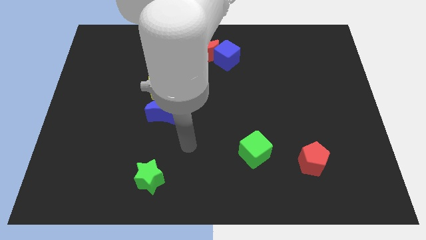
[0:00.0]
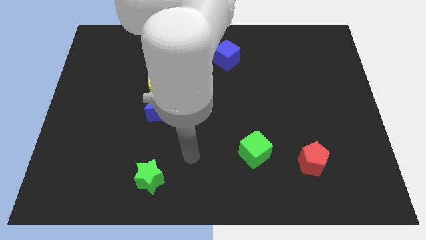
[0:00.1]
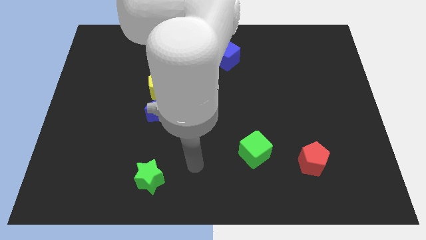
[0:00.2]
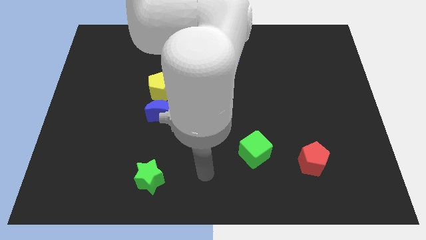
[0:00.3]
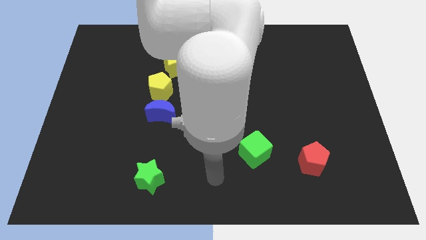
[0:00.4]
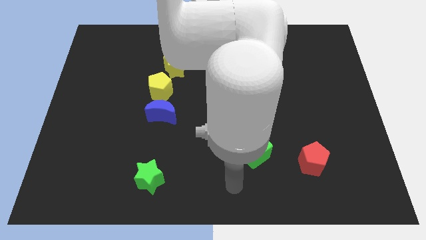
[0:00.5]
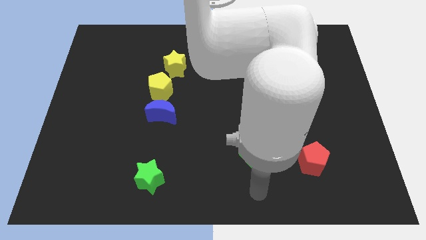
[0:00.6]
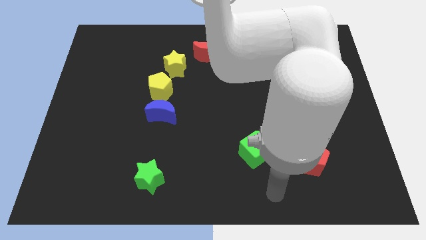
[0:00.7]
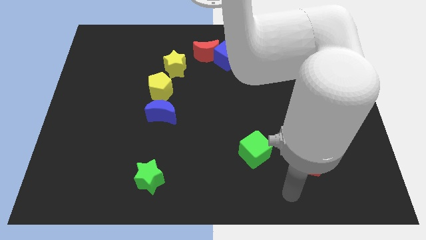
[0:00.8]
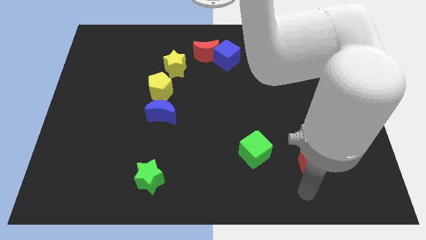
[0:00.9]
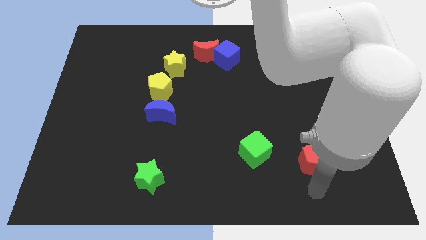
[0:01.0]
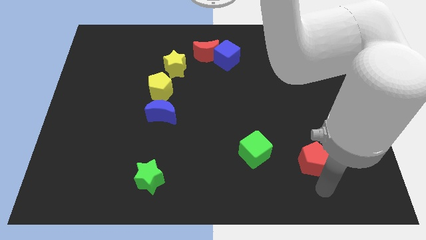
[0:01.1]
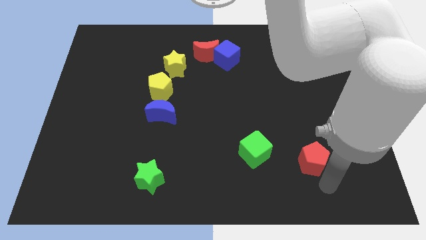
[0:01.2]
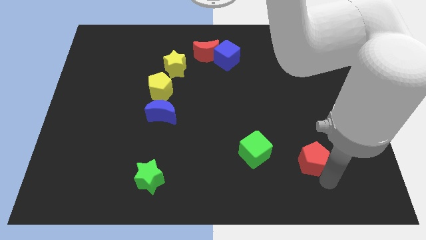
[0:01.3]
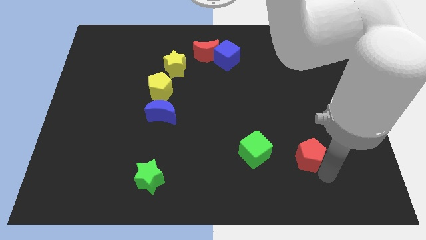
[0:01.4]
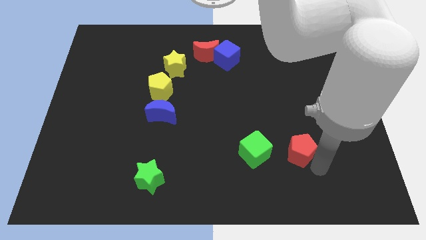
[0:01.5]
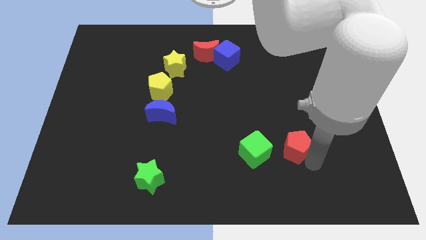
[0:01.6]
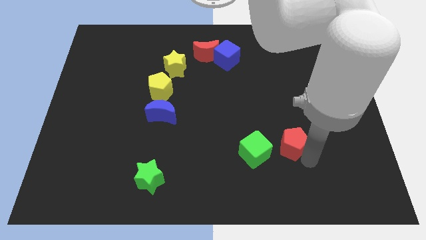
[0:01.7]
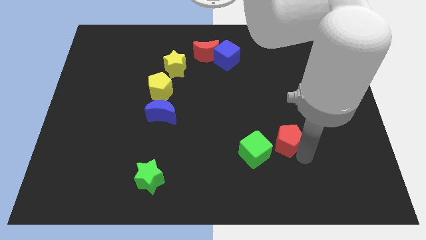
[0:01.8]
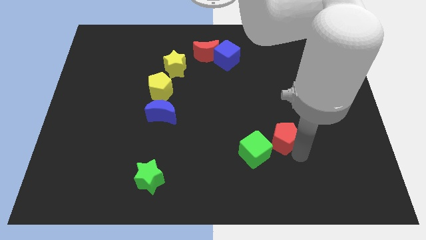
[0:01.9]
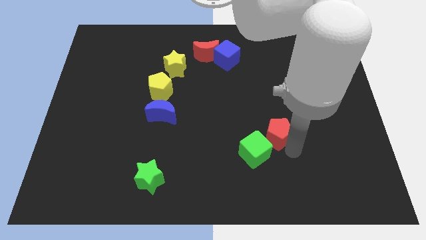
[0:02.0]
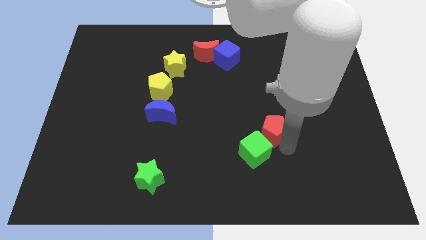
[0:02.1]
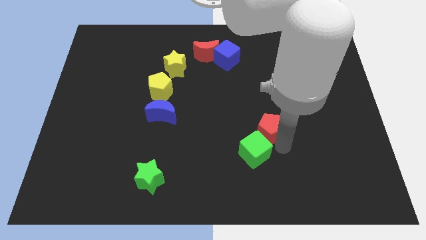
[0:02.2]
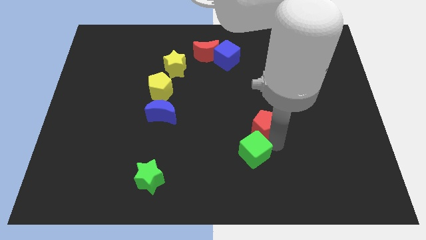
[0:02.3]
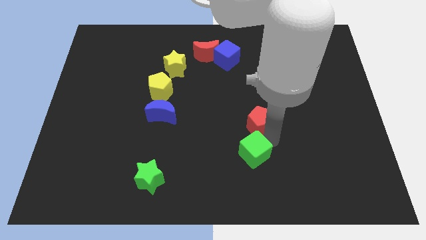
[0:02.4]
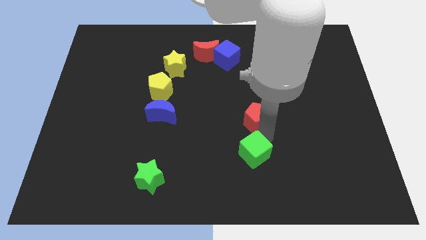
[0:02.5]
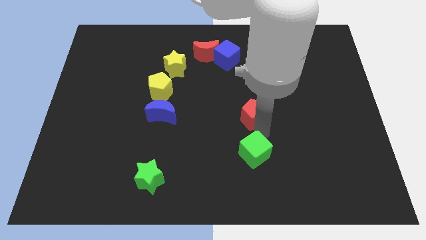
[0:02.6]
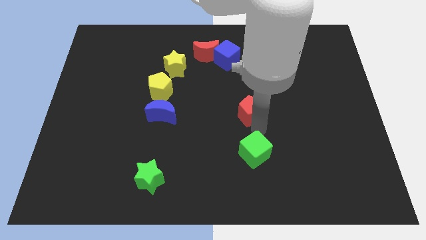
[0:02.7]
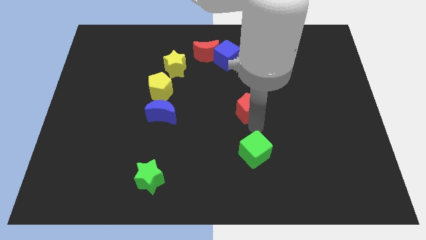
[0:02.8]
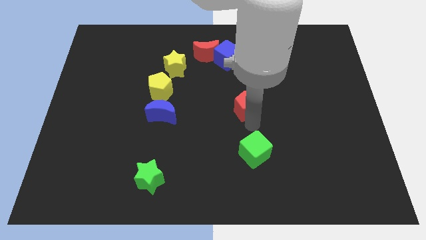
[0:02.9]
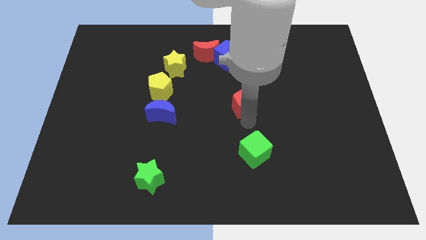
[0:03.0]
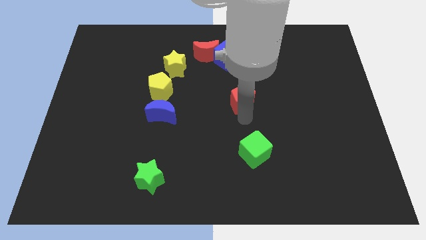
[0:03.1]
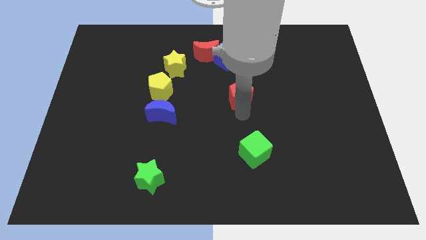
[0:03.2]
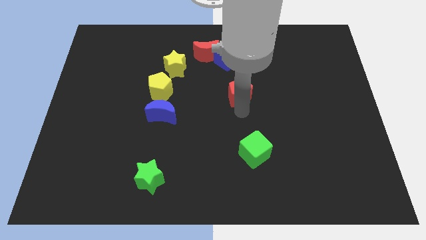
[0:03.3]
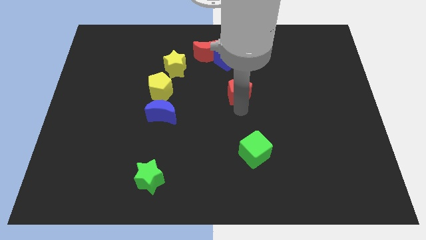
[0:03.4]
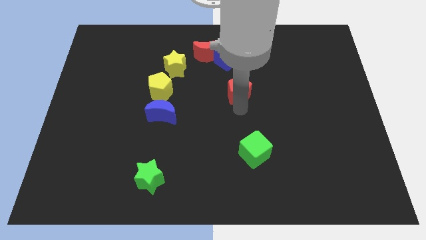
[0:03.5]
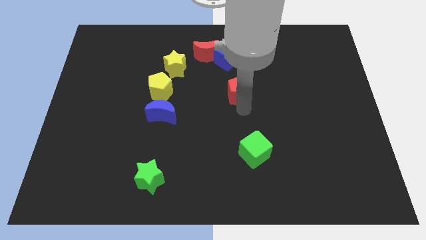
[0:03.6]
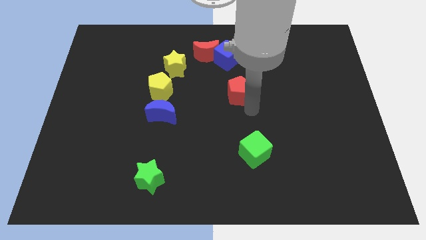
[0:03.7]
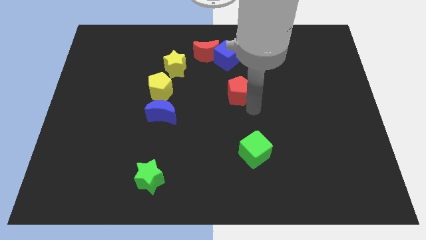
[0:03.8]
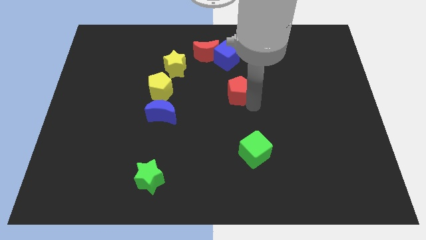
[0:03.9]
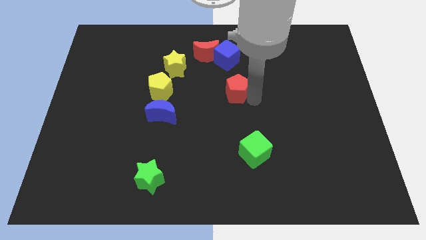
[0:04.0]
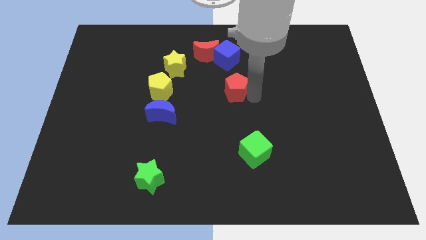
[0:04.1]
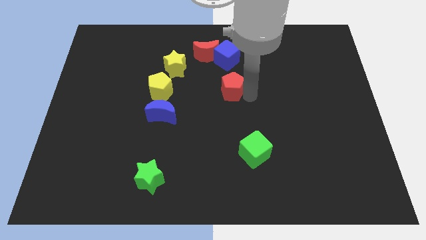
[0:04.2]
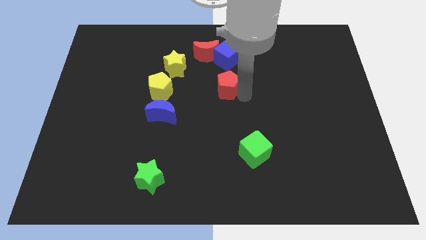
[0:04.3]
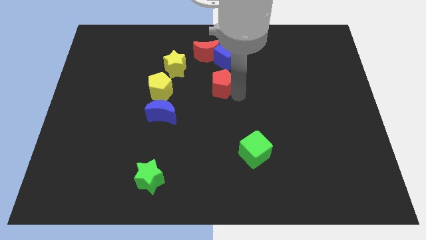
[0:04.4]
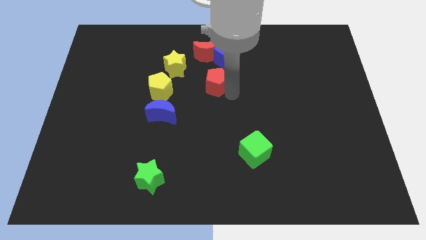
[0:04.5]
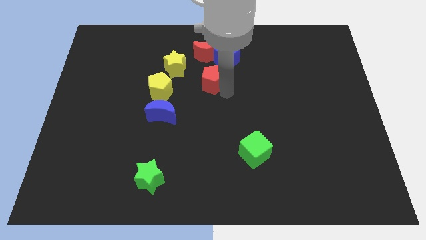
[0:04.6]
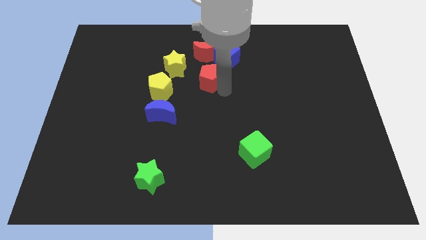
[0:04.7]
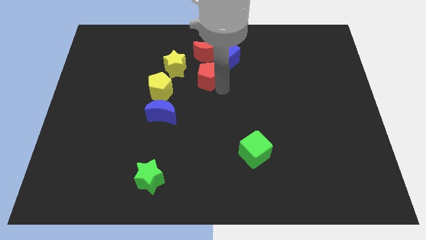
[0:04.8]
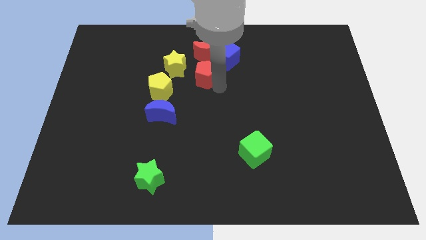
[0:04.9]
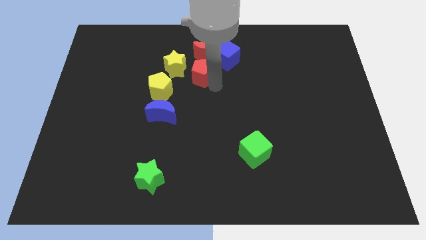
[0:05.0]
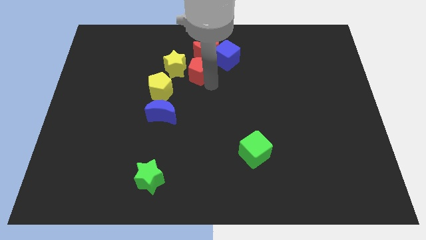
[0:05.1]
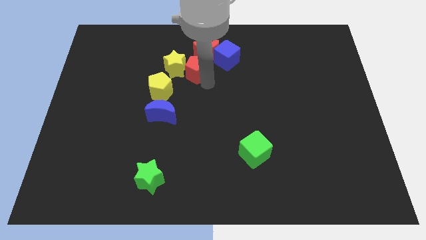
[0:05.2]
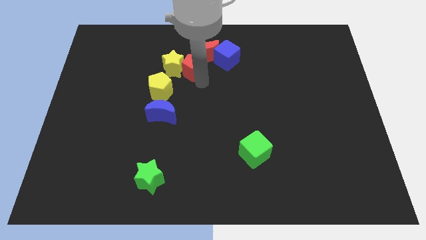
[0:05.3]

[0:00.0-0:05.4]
slide the red pentagon close to the yellow star

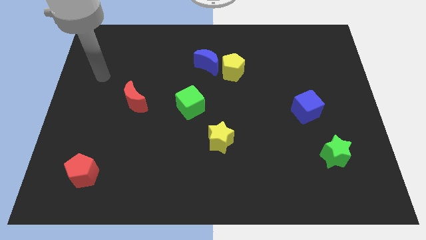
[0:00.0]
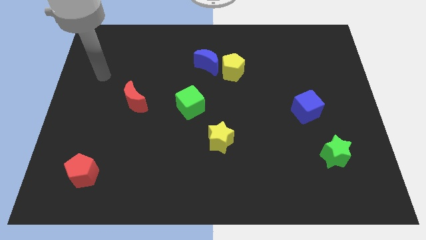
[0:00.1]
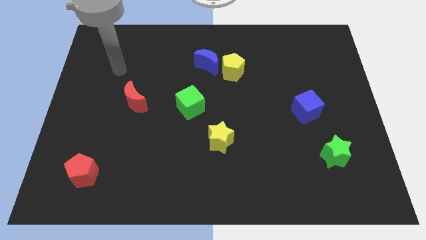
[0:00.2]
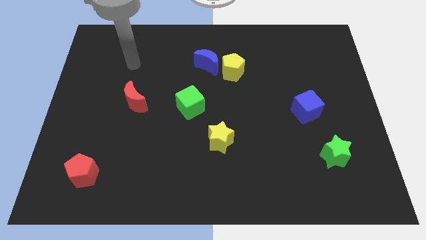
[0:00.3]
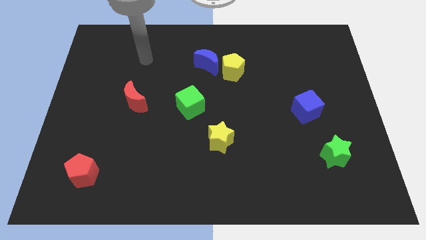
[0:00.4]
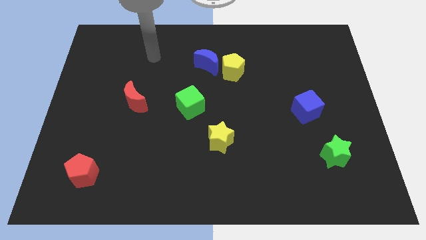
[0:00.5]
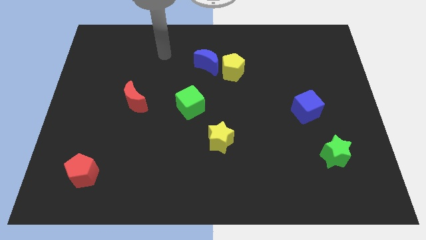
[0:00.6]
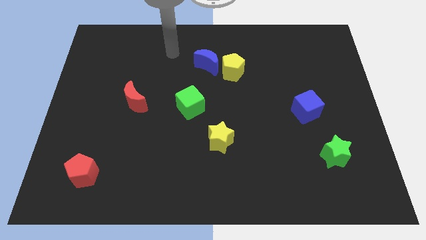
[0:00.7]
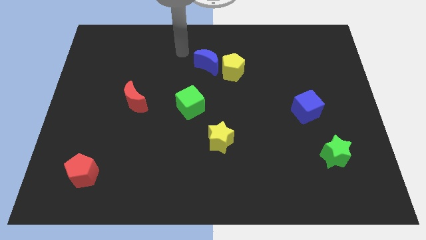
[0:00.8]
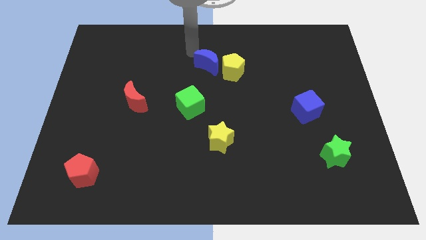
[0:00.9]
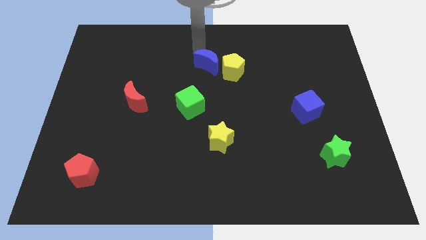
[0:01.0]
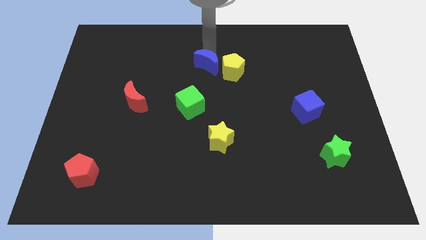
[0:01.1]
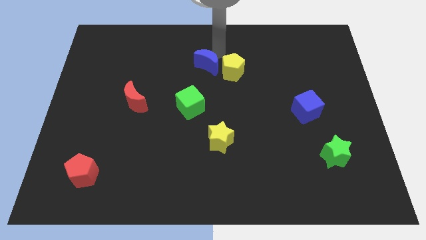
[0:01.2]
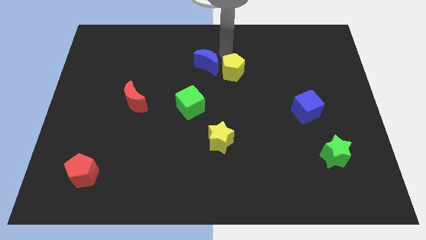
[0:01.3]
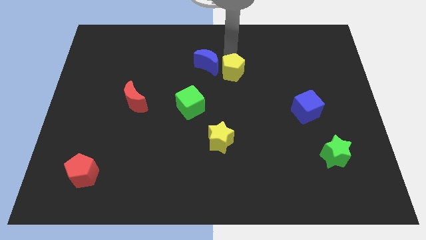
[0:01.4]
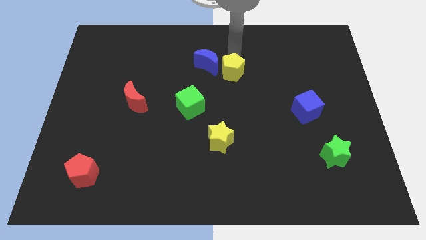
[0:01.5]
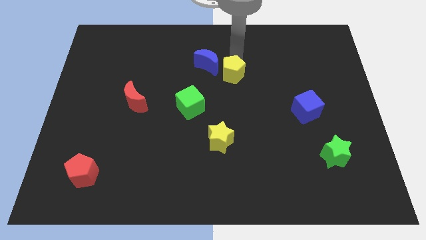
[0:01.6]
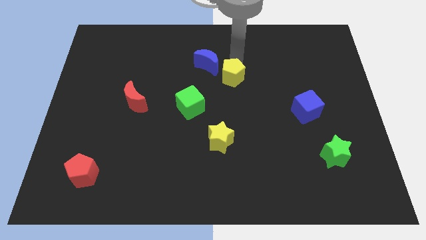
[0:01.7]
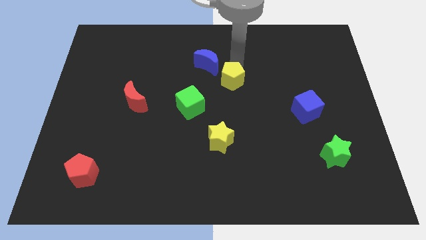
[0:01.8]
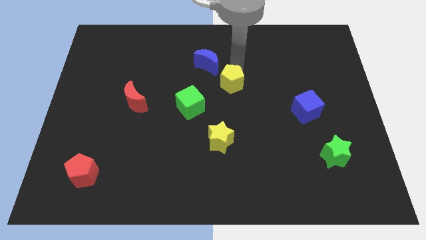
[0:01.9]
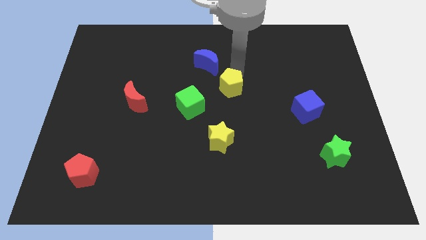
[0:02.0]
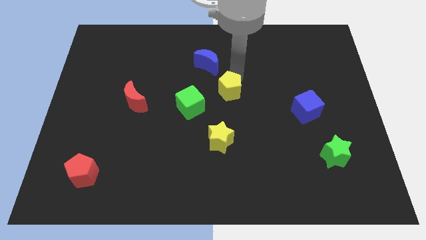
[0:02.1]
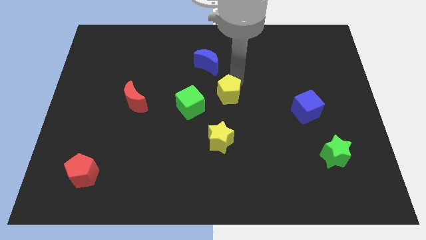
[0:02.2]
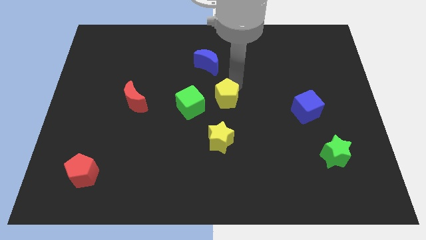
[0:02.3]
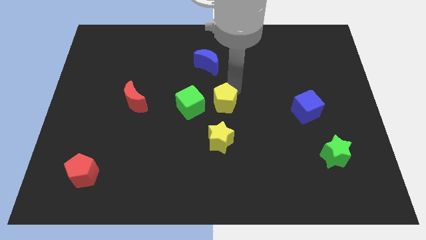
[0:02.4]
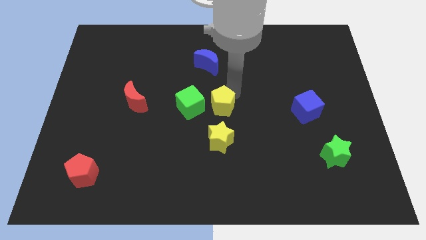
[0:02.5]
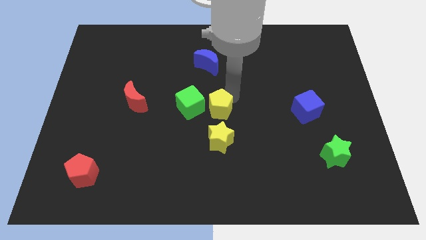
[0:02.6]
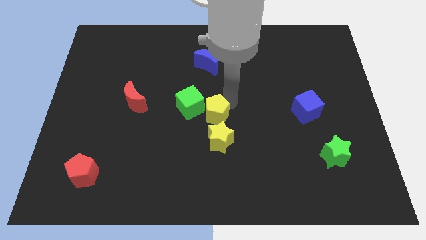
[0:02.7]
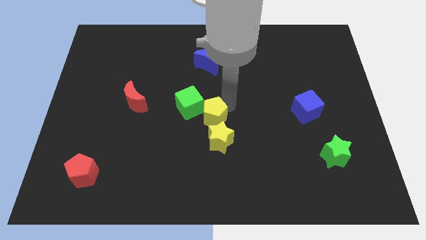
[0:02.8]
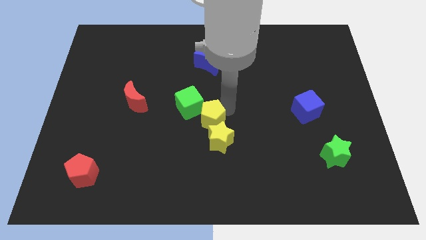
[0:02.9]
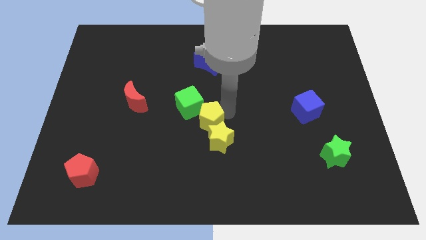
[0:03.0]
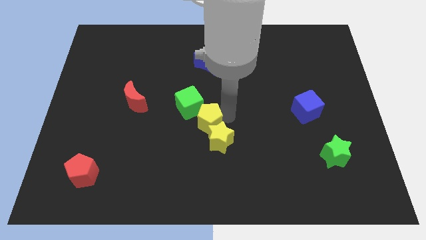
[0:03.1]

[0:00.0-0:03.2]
move the yellow pentagon towards the yellow star
